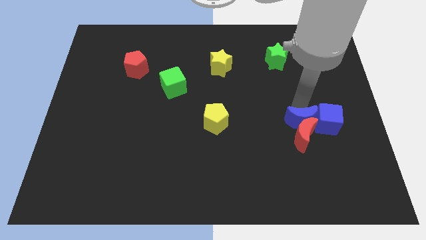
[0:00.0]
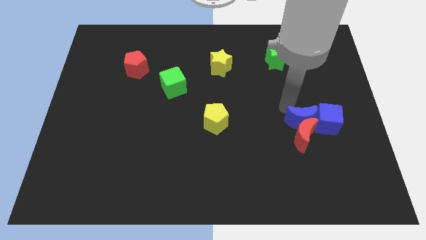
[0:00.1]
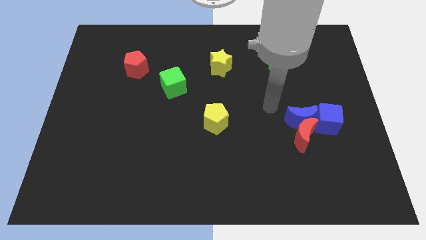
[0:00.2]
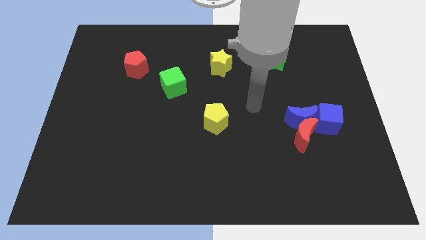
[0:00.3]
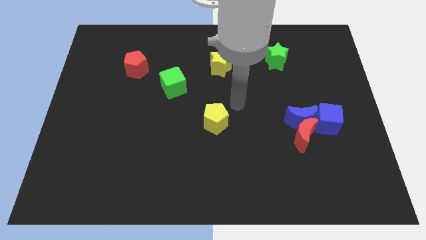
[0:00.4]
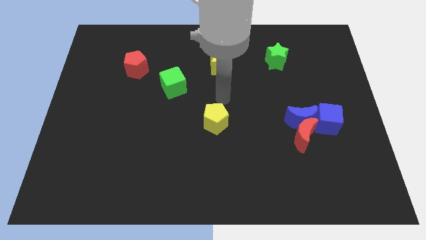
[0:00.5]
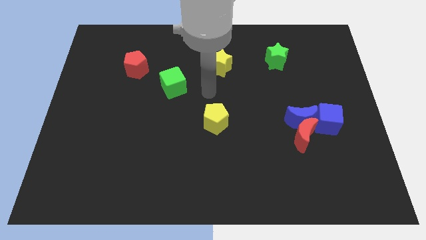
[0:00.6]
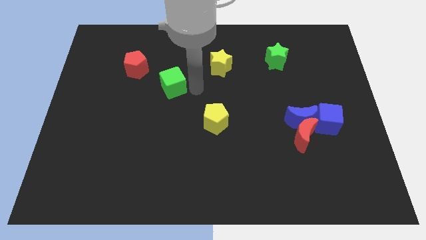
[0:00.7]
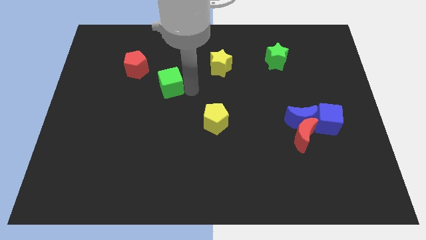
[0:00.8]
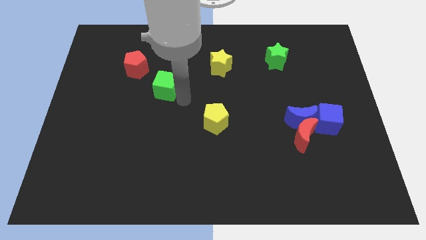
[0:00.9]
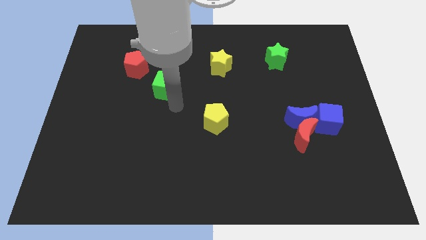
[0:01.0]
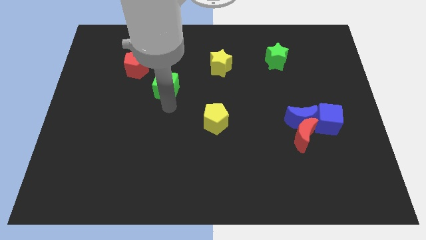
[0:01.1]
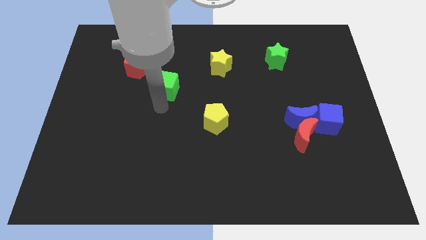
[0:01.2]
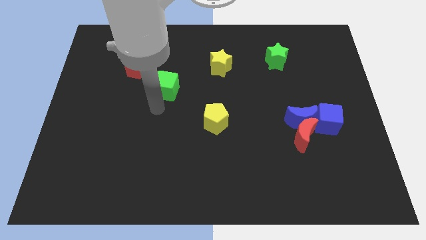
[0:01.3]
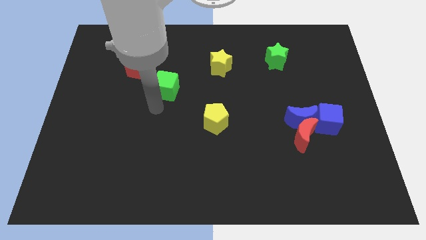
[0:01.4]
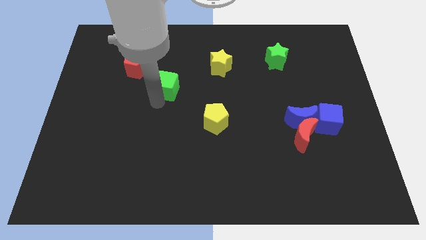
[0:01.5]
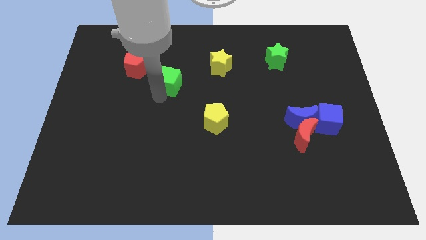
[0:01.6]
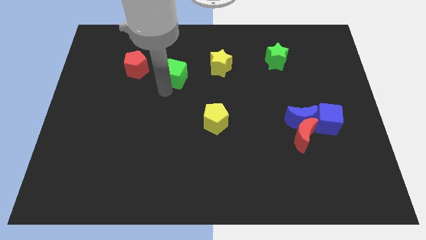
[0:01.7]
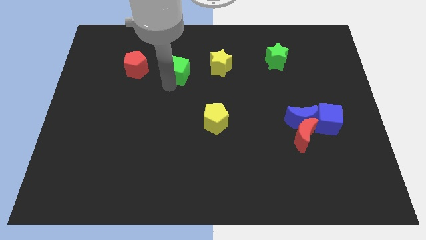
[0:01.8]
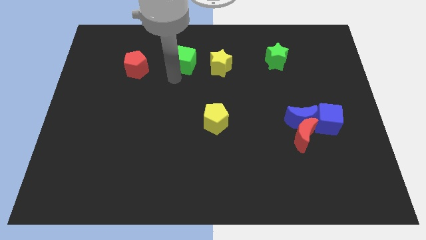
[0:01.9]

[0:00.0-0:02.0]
place the green cube in between the yellow star and red pentagon

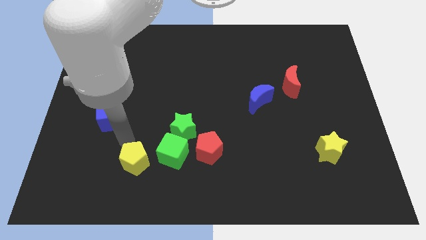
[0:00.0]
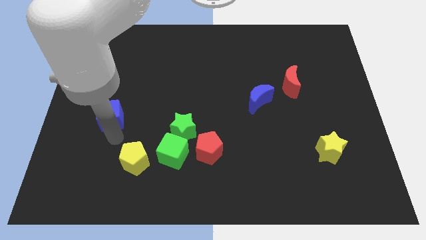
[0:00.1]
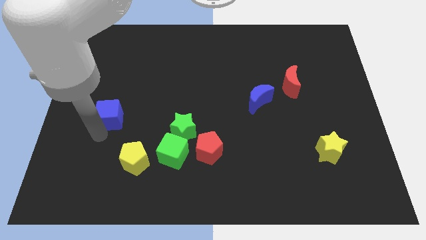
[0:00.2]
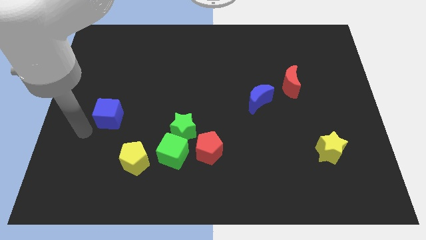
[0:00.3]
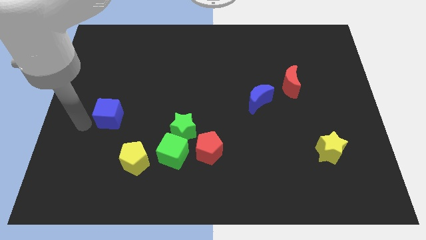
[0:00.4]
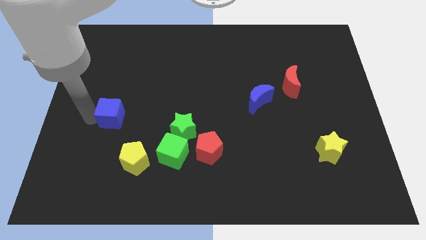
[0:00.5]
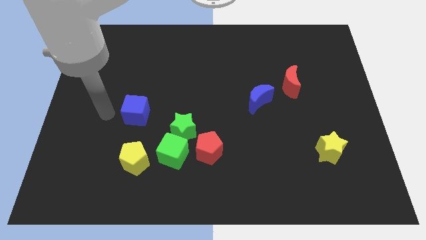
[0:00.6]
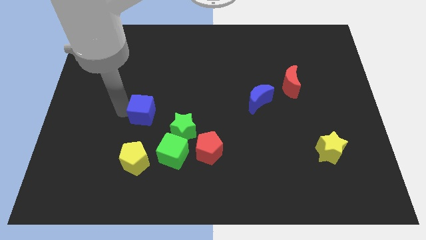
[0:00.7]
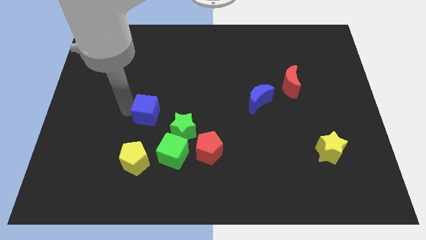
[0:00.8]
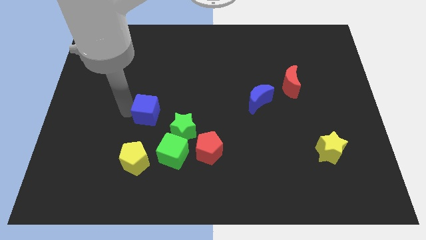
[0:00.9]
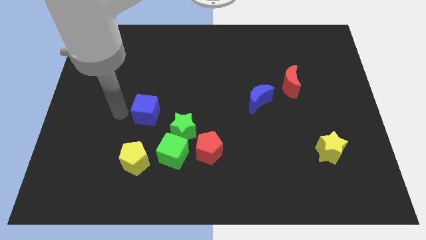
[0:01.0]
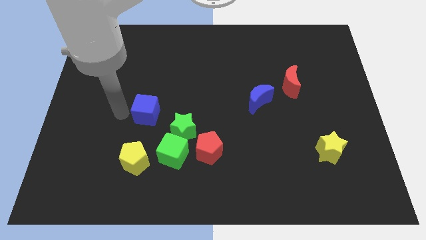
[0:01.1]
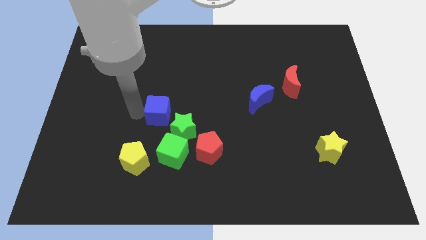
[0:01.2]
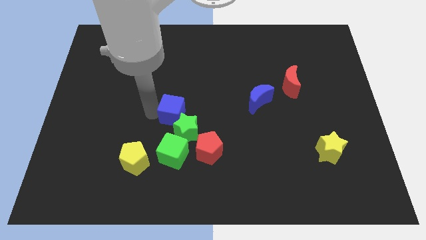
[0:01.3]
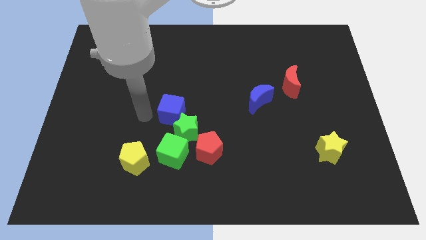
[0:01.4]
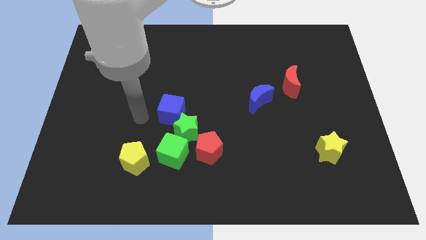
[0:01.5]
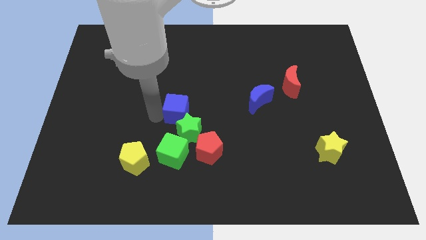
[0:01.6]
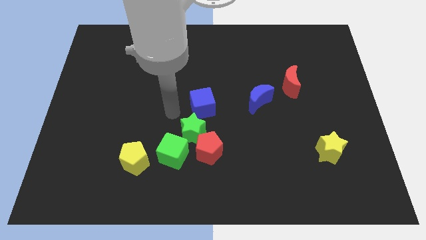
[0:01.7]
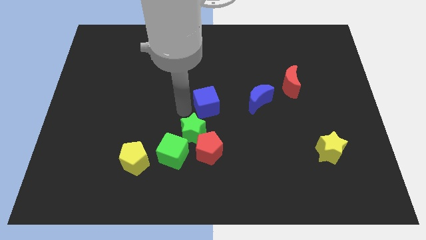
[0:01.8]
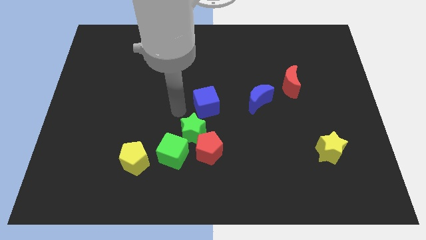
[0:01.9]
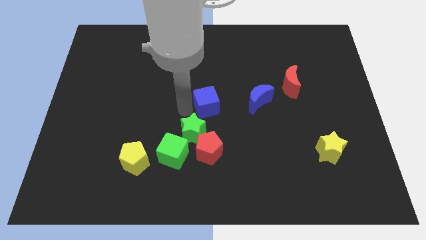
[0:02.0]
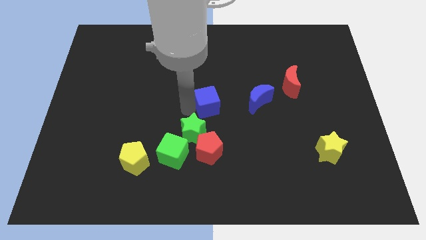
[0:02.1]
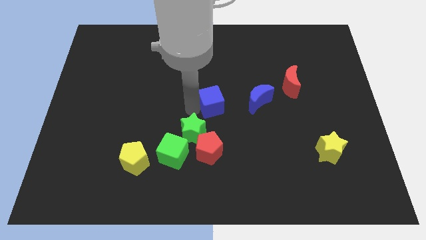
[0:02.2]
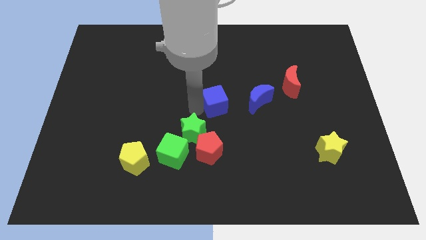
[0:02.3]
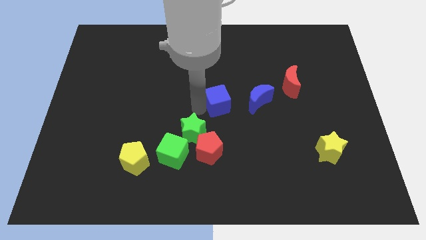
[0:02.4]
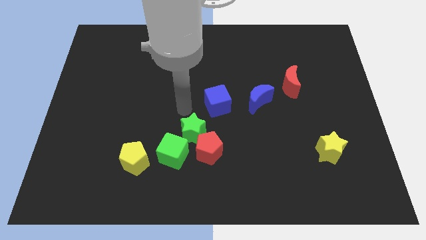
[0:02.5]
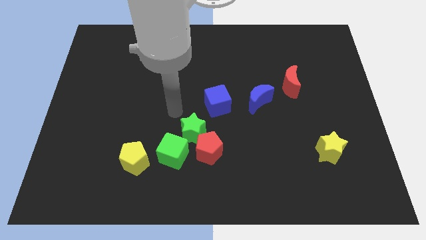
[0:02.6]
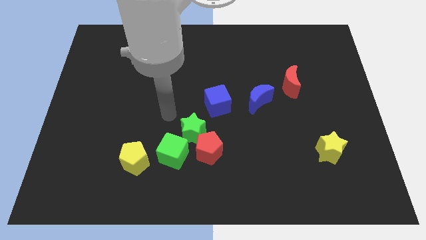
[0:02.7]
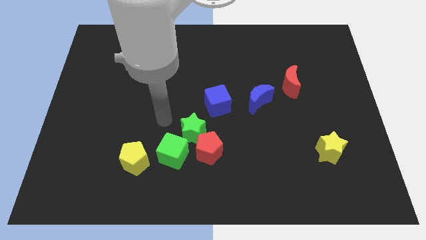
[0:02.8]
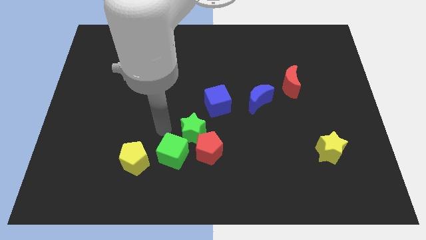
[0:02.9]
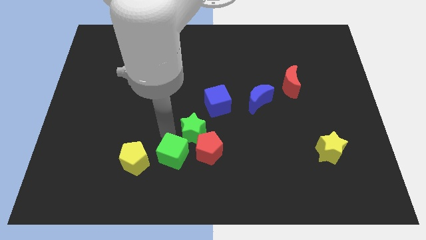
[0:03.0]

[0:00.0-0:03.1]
push the blue cube slightly towards the center

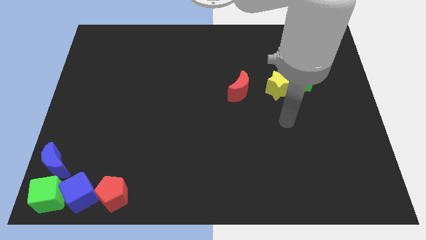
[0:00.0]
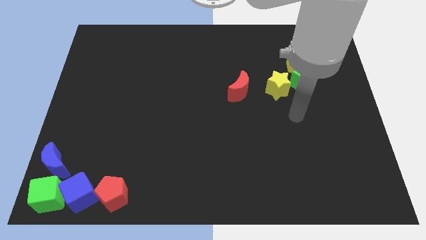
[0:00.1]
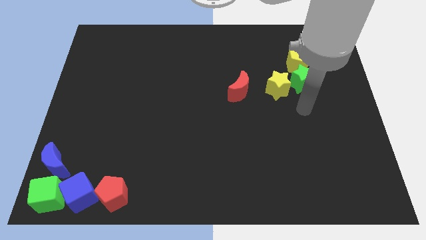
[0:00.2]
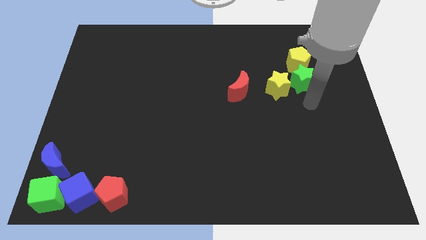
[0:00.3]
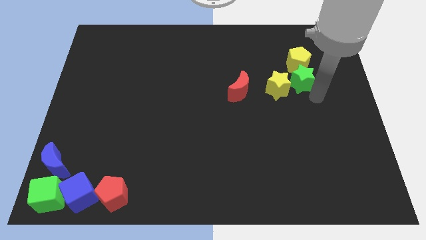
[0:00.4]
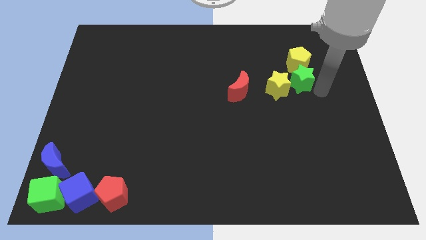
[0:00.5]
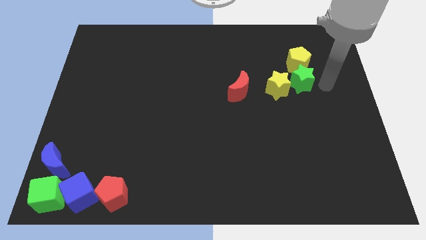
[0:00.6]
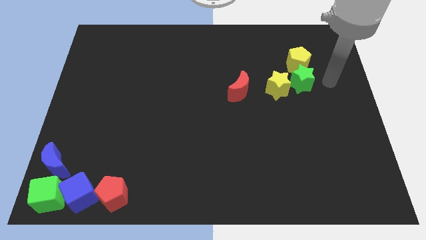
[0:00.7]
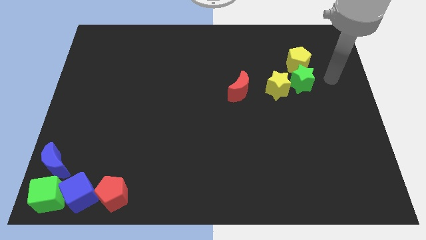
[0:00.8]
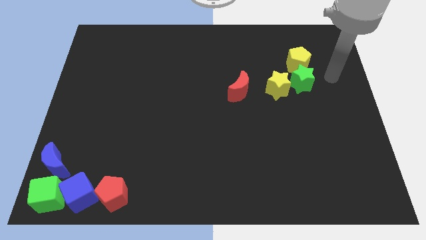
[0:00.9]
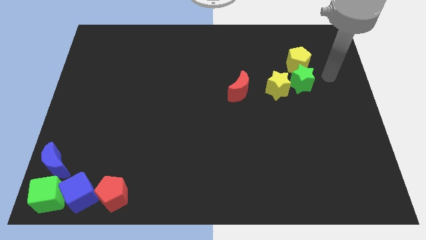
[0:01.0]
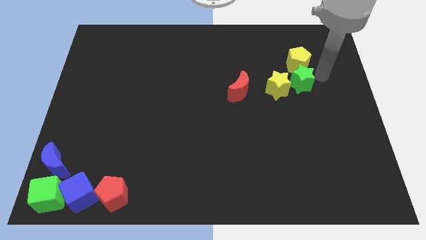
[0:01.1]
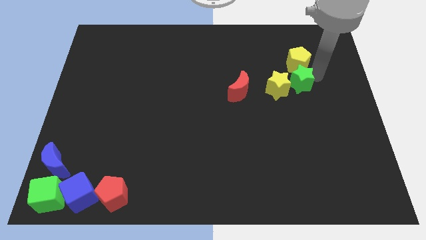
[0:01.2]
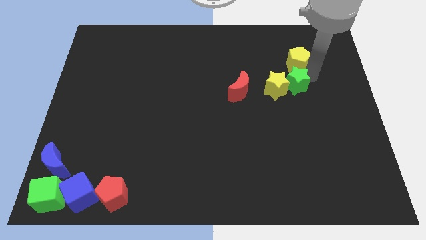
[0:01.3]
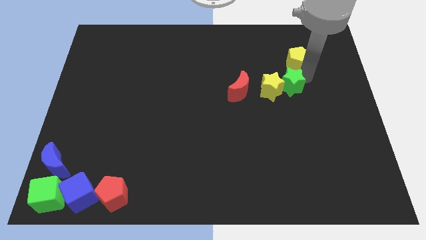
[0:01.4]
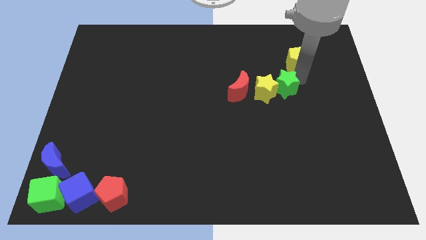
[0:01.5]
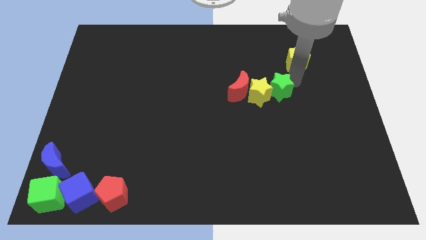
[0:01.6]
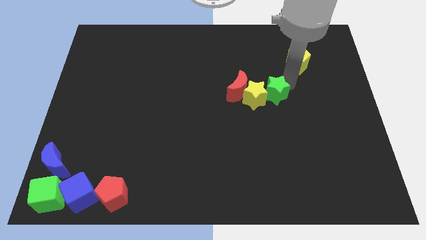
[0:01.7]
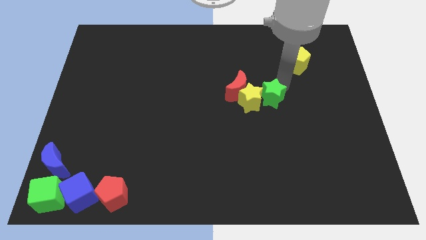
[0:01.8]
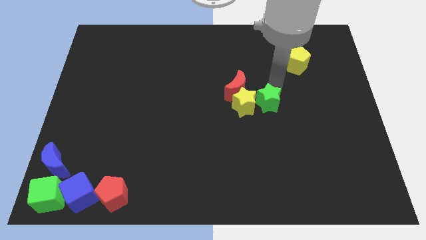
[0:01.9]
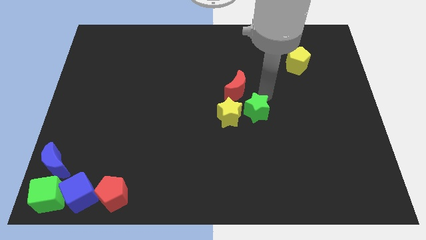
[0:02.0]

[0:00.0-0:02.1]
slide the yellow star and the green star towards the center of the board

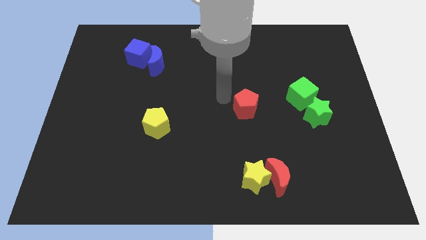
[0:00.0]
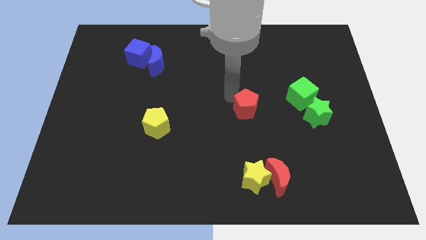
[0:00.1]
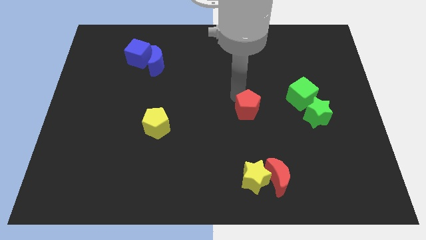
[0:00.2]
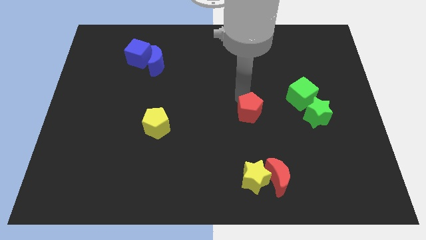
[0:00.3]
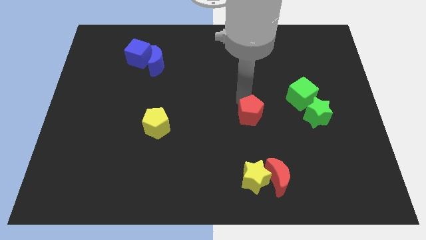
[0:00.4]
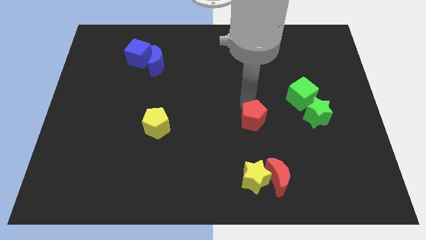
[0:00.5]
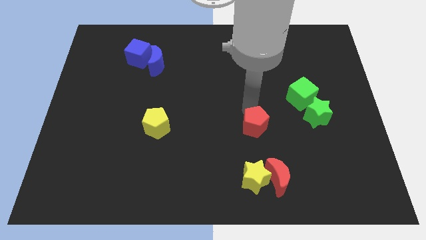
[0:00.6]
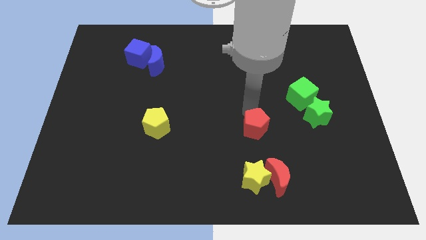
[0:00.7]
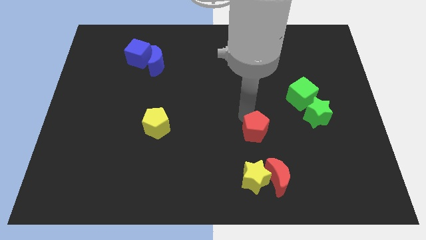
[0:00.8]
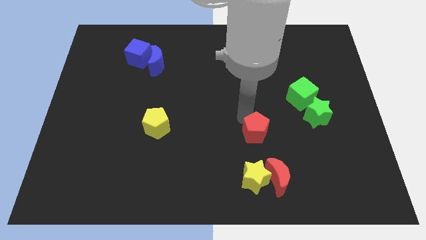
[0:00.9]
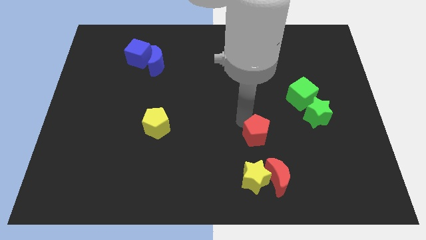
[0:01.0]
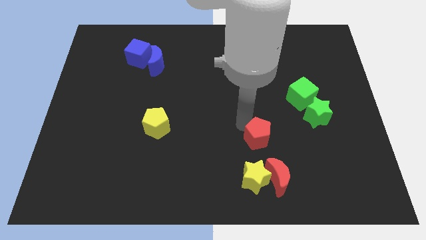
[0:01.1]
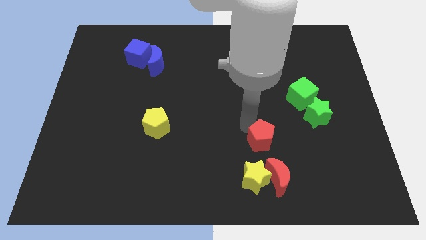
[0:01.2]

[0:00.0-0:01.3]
move red pentagon downwards

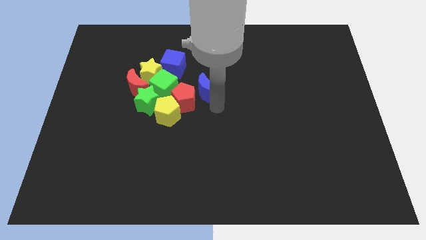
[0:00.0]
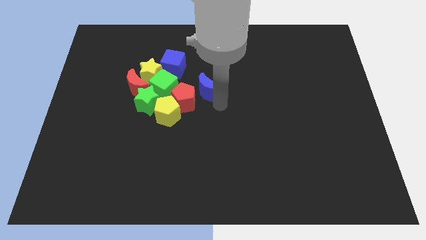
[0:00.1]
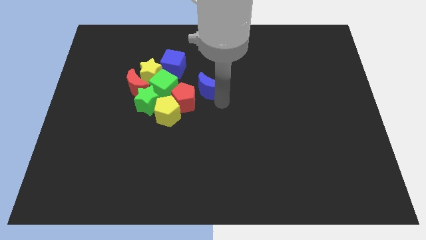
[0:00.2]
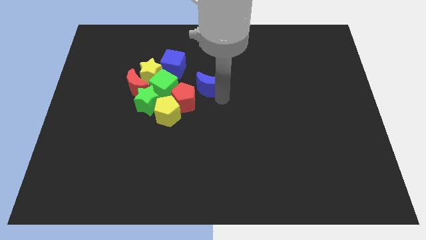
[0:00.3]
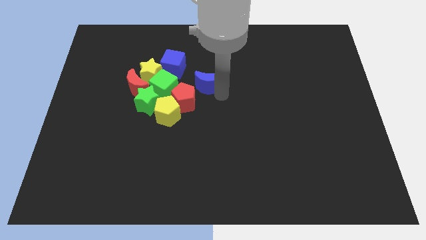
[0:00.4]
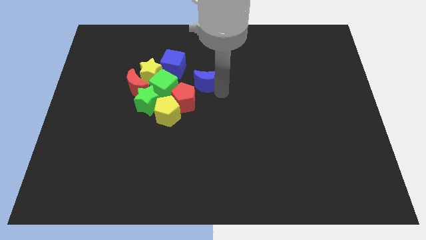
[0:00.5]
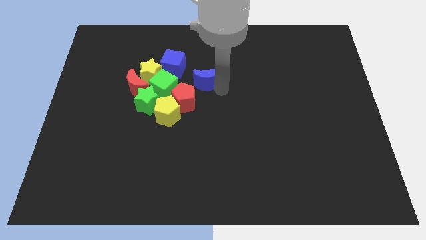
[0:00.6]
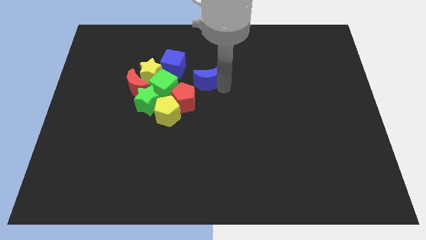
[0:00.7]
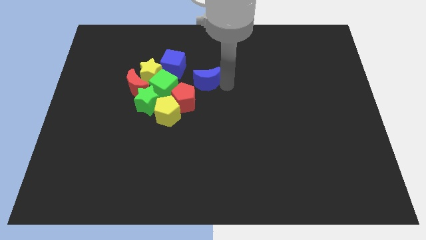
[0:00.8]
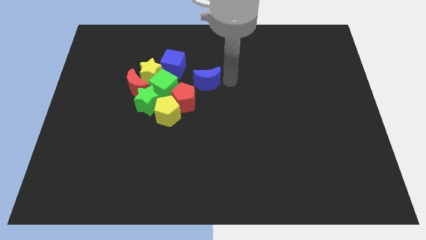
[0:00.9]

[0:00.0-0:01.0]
place the blue crescent towards the bottom right side of the blue cube
